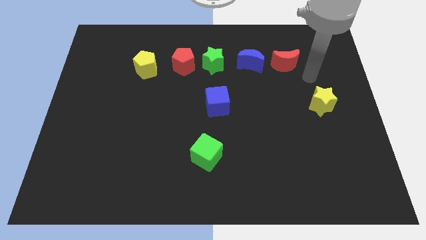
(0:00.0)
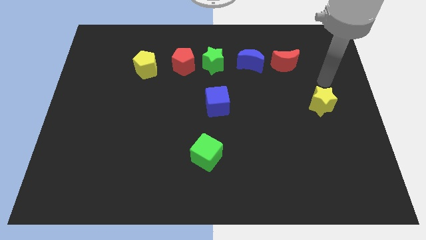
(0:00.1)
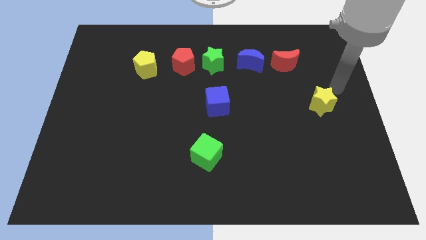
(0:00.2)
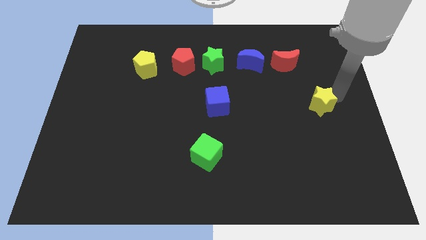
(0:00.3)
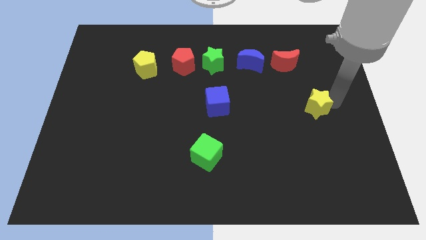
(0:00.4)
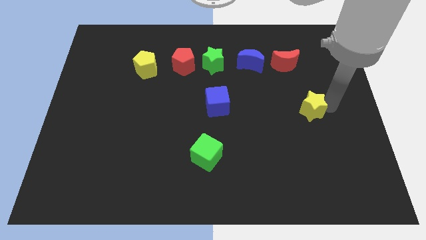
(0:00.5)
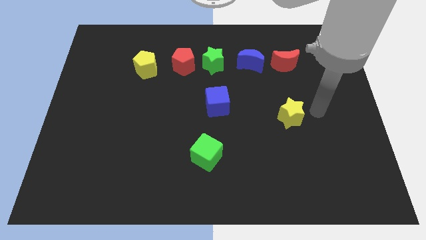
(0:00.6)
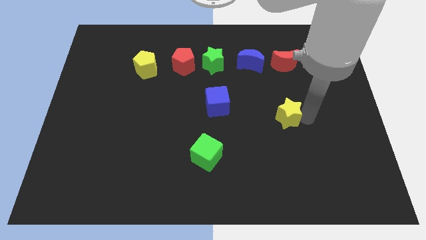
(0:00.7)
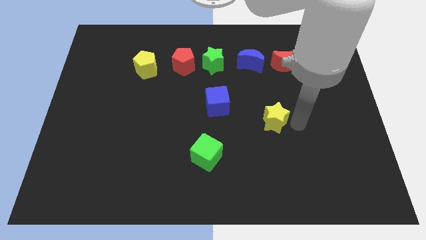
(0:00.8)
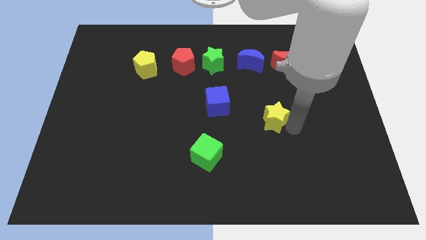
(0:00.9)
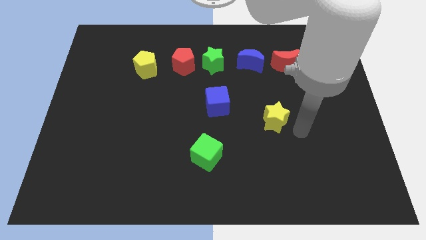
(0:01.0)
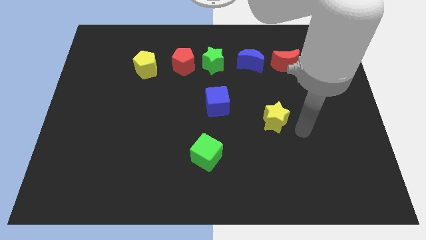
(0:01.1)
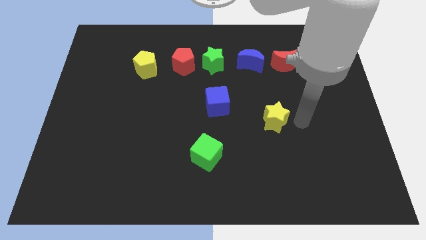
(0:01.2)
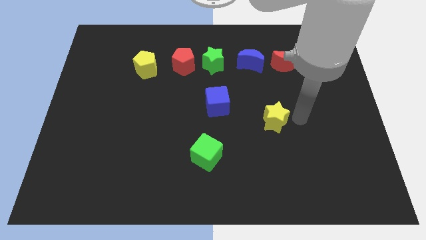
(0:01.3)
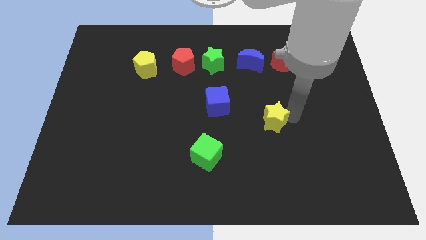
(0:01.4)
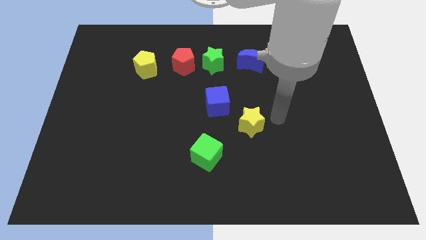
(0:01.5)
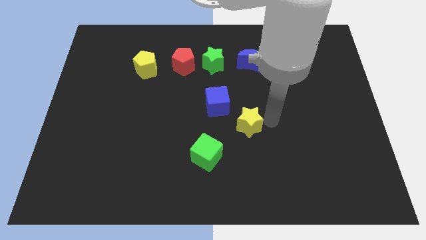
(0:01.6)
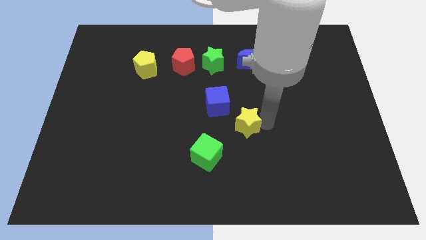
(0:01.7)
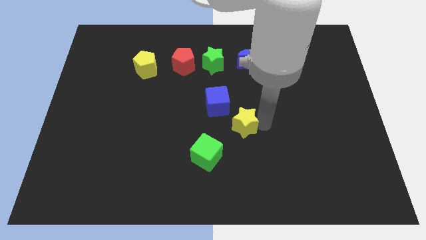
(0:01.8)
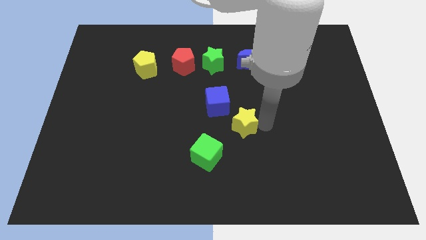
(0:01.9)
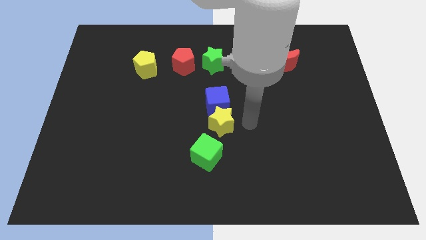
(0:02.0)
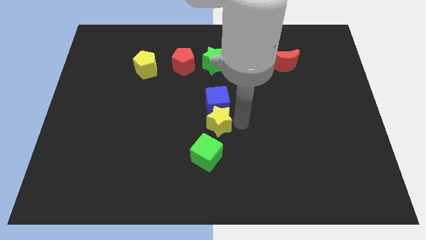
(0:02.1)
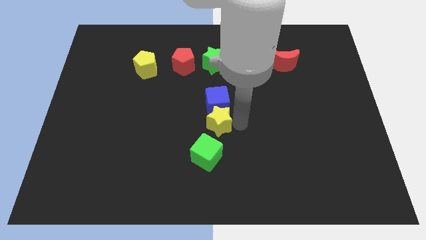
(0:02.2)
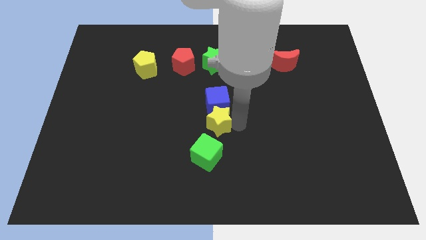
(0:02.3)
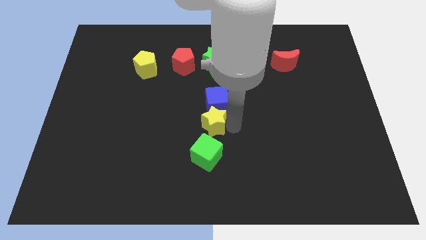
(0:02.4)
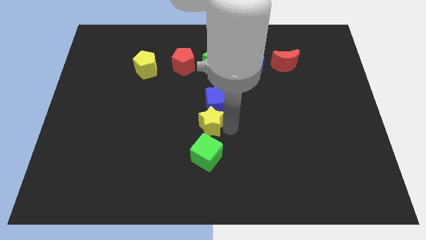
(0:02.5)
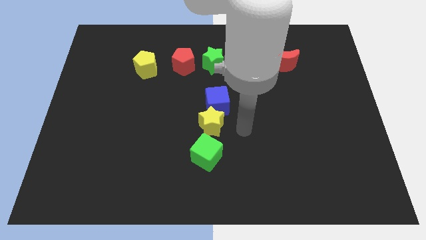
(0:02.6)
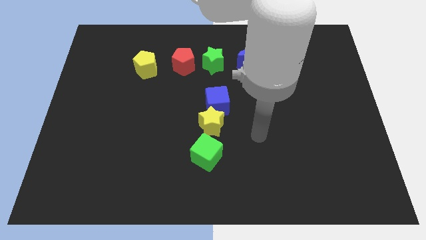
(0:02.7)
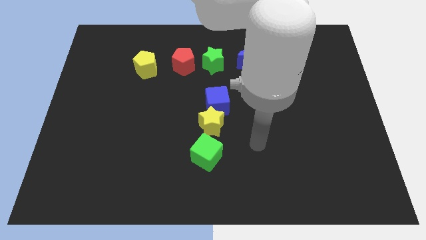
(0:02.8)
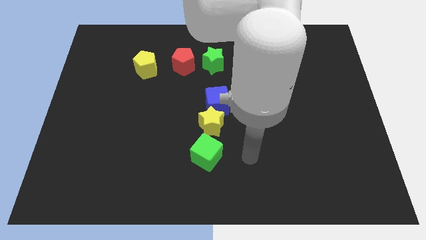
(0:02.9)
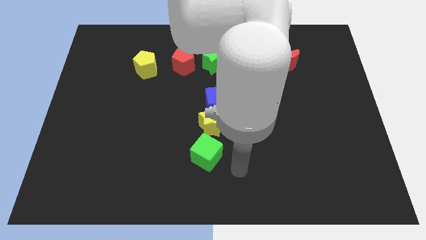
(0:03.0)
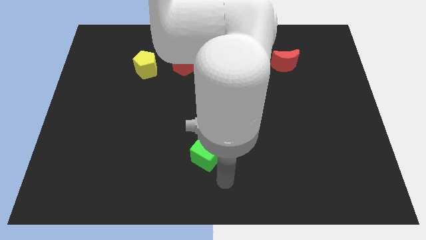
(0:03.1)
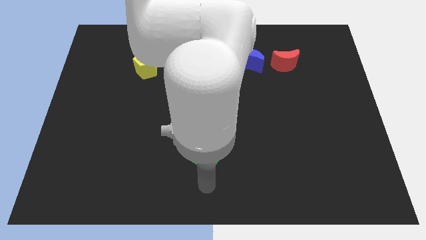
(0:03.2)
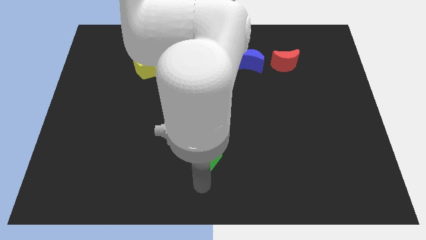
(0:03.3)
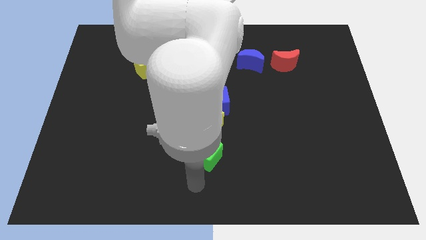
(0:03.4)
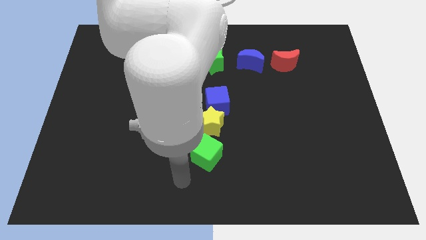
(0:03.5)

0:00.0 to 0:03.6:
move the yellow star to the bottom left side of the blue cube

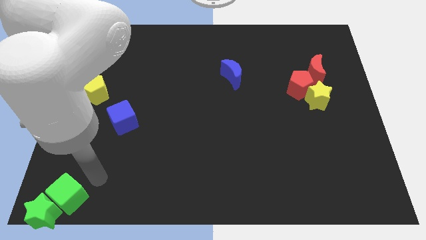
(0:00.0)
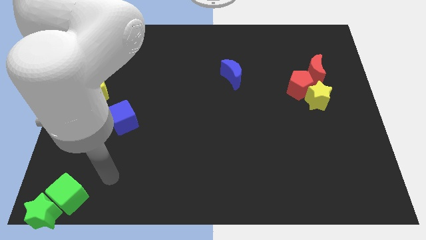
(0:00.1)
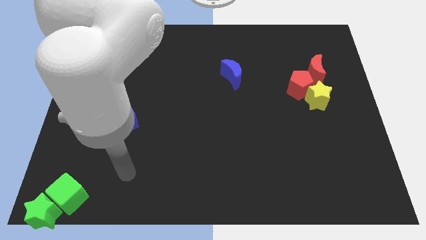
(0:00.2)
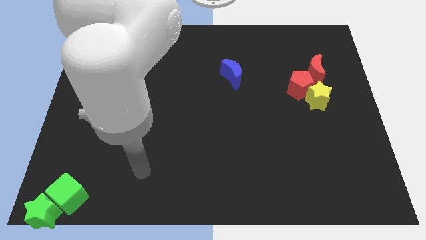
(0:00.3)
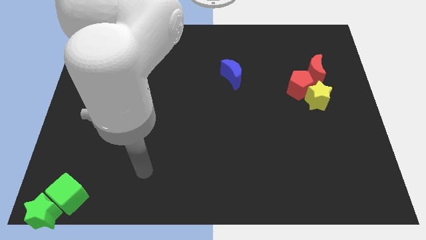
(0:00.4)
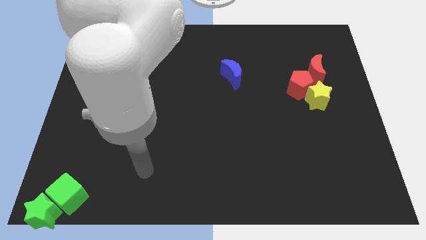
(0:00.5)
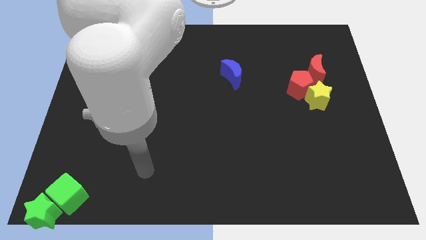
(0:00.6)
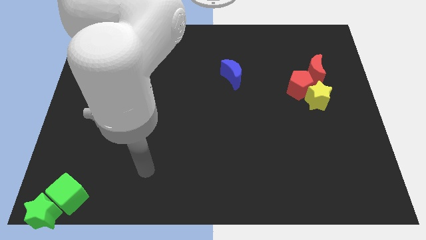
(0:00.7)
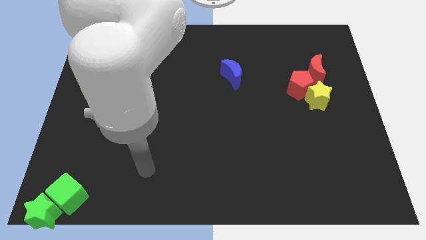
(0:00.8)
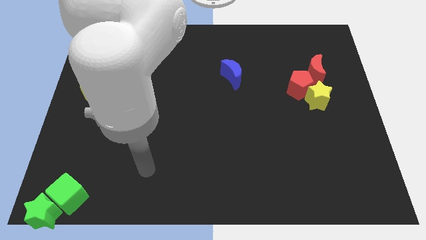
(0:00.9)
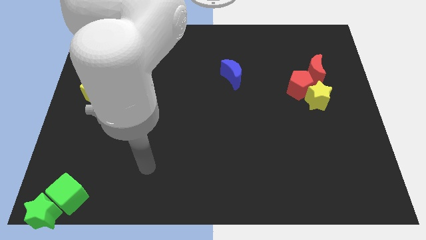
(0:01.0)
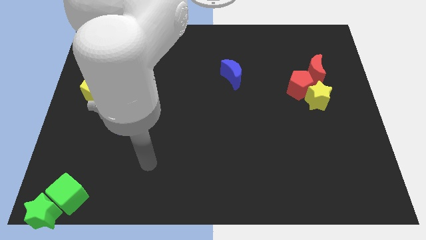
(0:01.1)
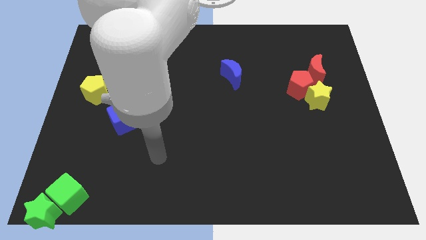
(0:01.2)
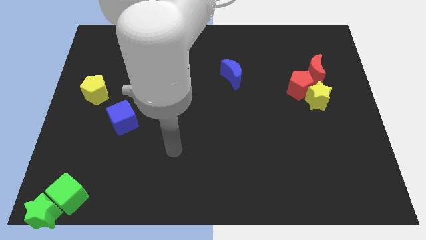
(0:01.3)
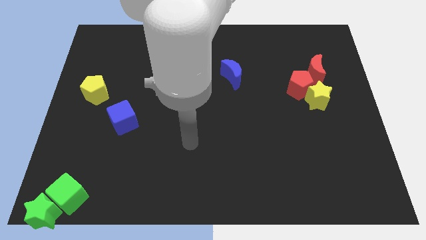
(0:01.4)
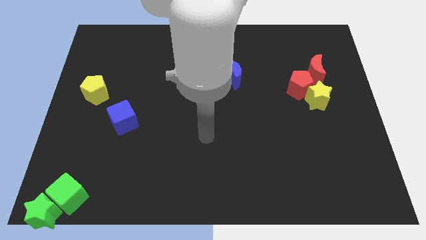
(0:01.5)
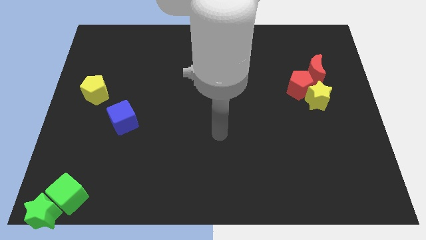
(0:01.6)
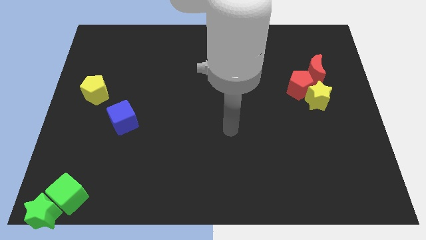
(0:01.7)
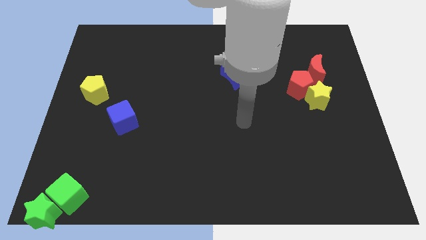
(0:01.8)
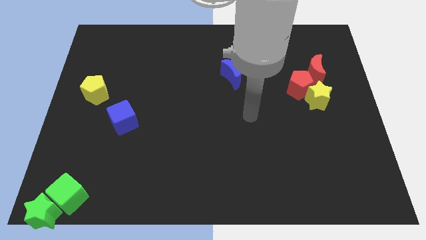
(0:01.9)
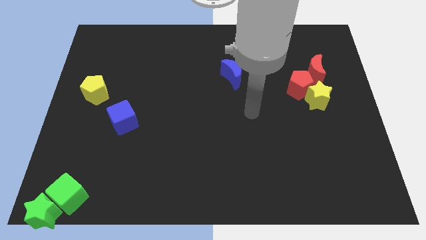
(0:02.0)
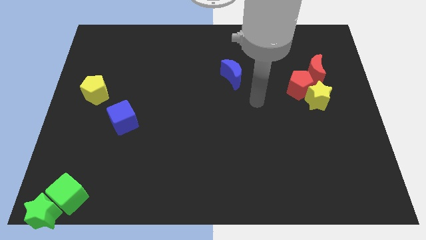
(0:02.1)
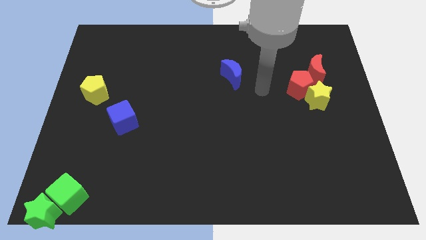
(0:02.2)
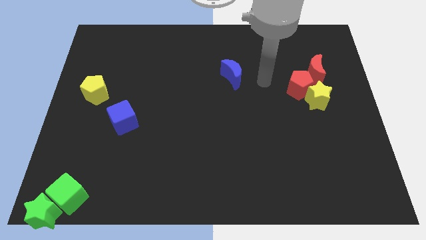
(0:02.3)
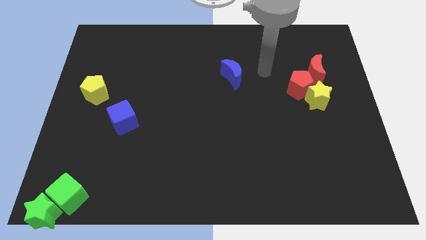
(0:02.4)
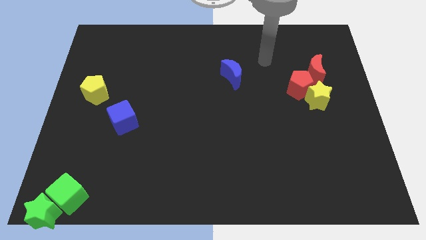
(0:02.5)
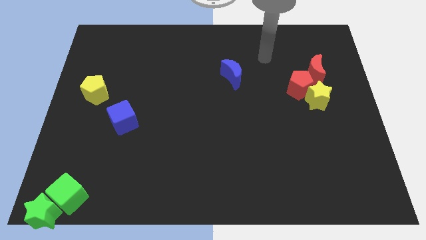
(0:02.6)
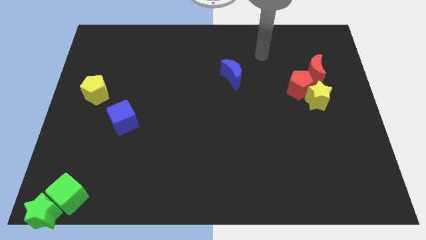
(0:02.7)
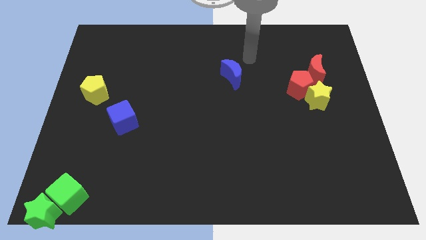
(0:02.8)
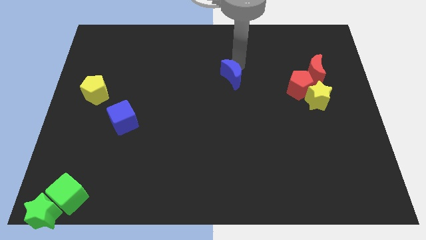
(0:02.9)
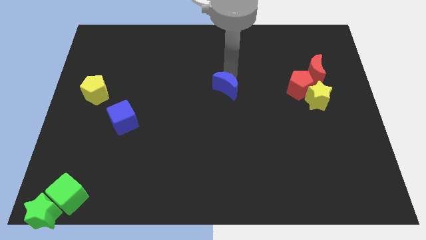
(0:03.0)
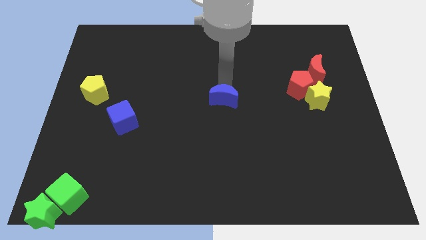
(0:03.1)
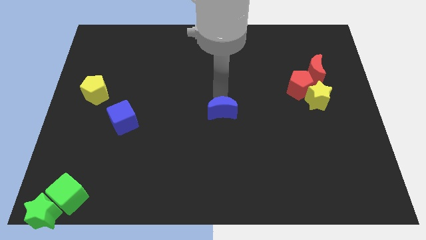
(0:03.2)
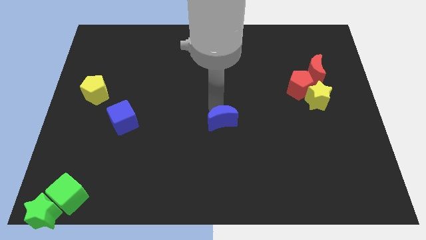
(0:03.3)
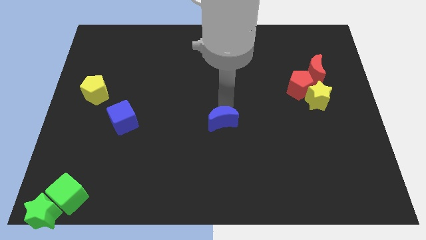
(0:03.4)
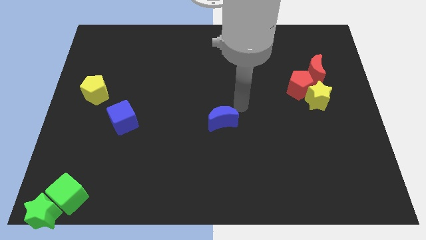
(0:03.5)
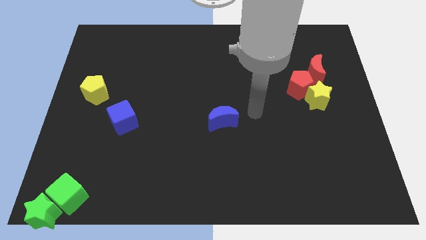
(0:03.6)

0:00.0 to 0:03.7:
push blue crescent slightly to the bottom

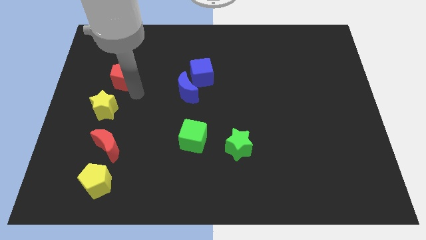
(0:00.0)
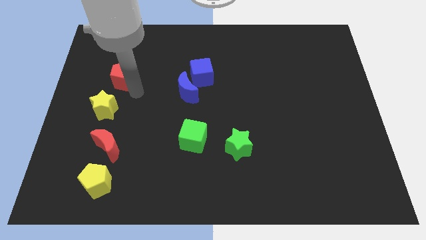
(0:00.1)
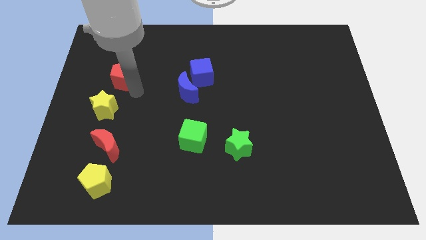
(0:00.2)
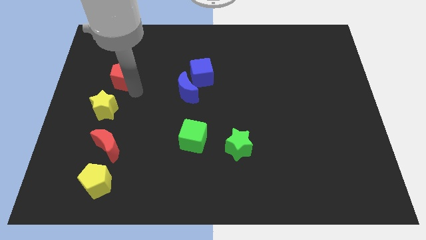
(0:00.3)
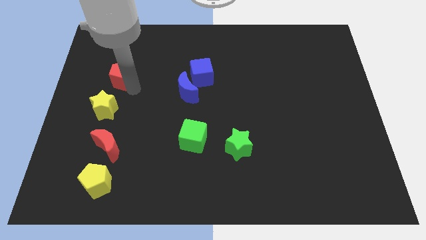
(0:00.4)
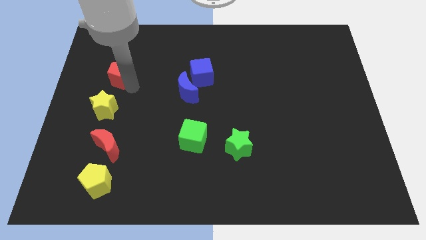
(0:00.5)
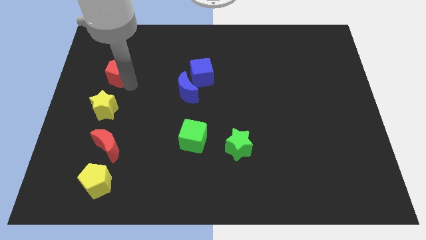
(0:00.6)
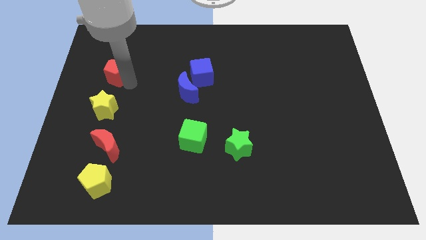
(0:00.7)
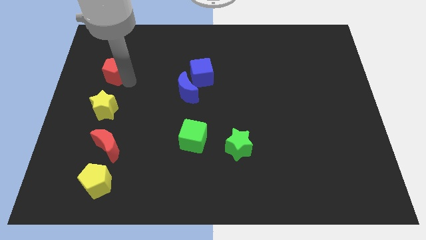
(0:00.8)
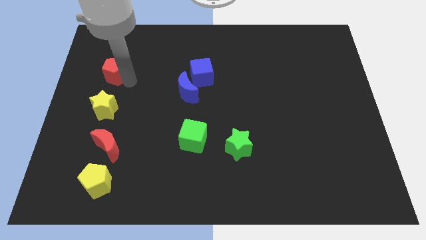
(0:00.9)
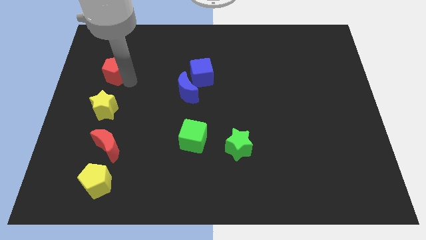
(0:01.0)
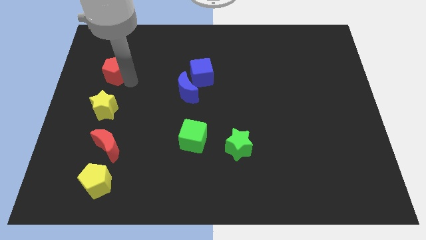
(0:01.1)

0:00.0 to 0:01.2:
place red pentagon above yellow star

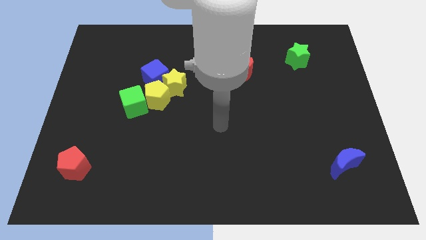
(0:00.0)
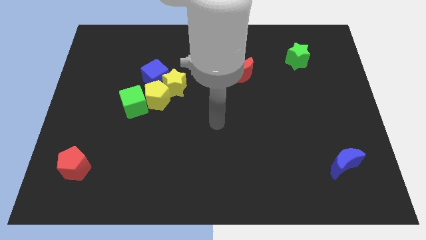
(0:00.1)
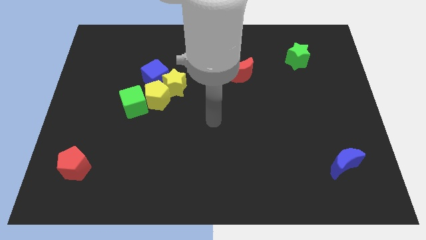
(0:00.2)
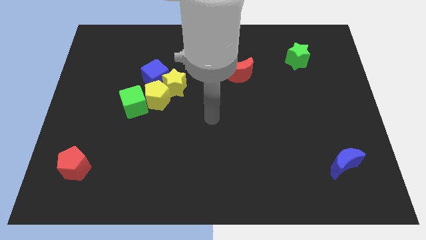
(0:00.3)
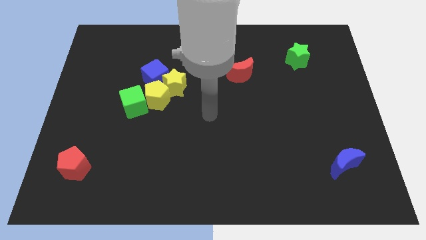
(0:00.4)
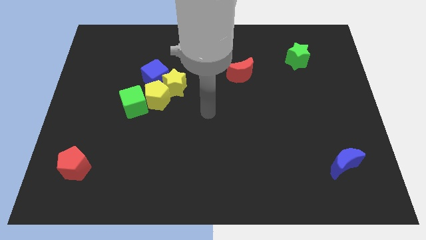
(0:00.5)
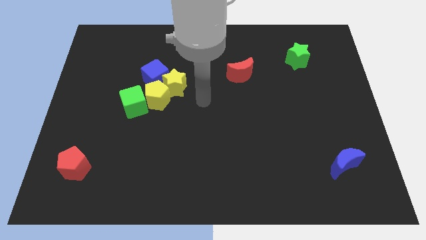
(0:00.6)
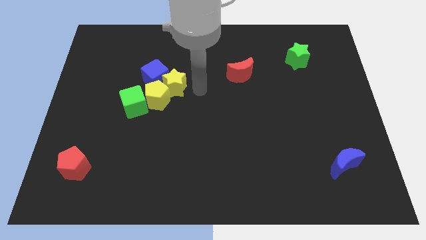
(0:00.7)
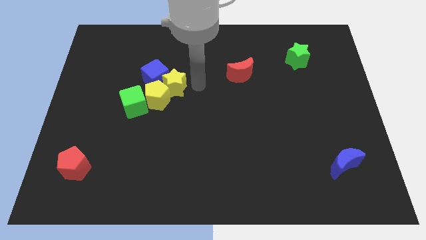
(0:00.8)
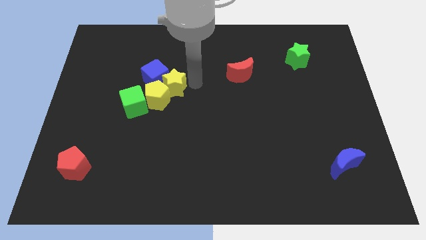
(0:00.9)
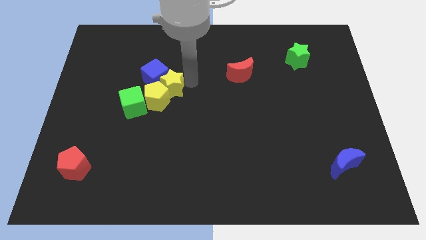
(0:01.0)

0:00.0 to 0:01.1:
place your arm to the right side of yellow star
